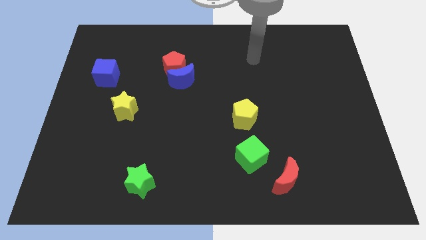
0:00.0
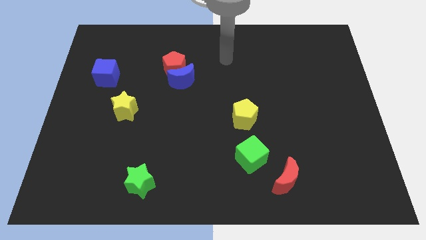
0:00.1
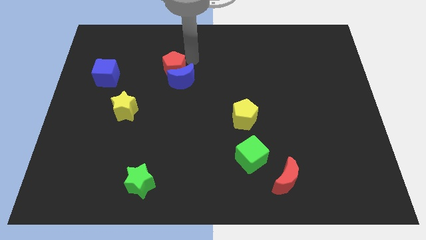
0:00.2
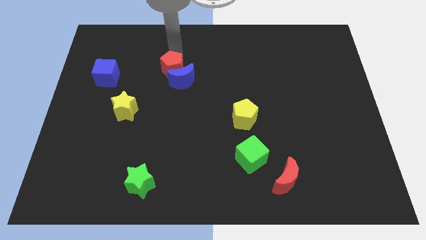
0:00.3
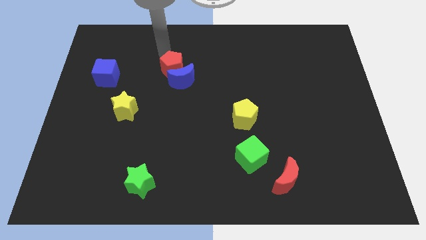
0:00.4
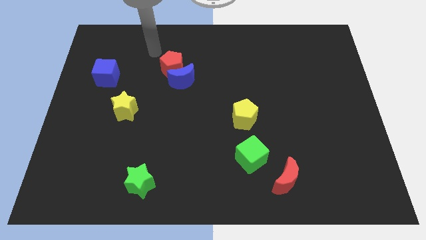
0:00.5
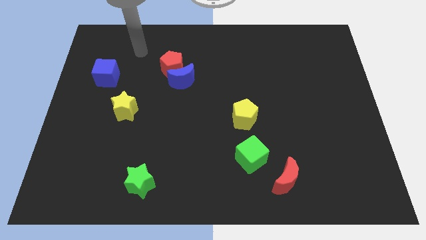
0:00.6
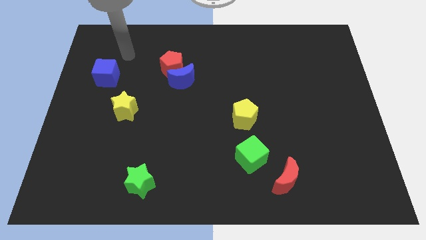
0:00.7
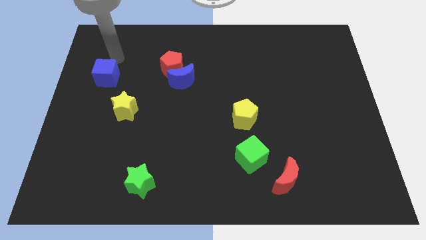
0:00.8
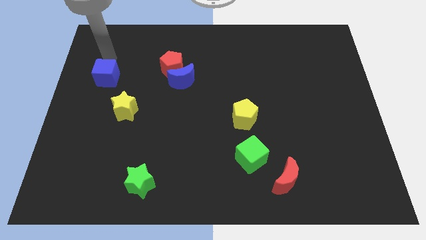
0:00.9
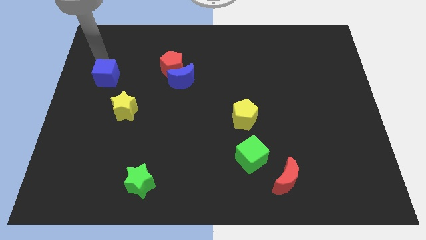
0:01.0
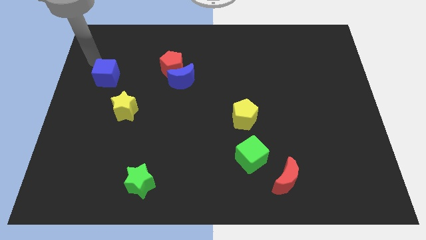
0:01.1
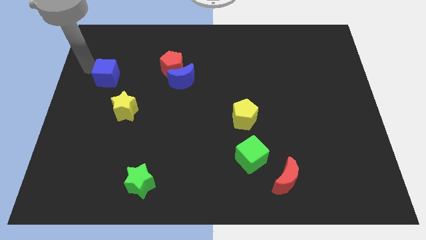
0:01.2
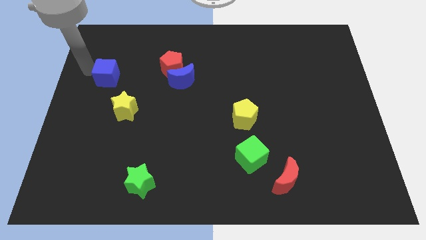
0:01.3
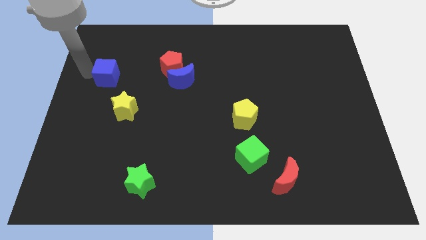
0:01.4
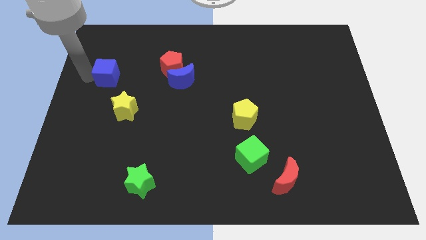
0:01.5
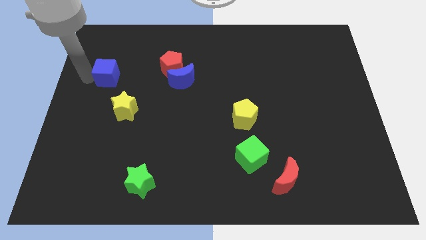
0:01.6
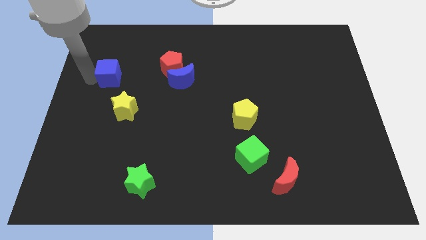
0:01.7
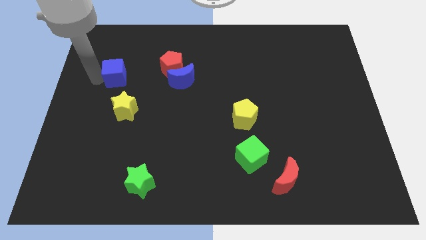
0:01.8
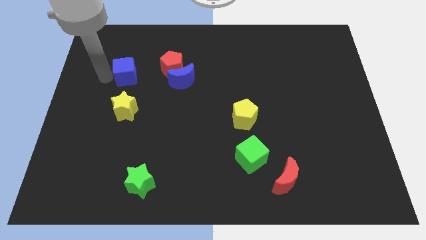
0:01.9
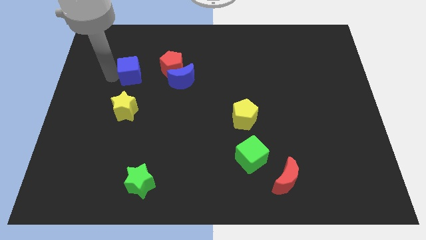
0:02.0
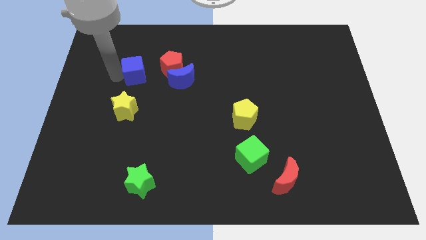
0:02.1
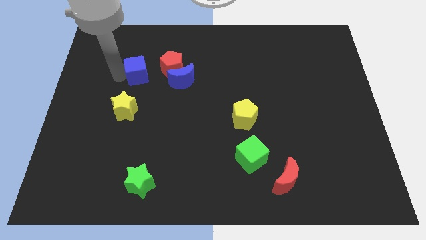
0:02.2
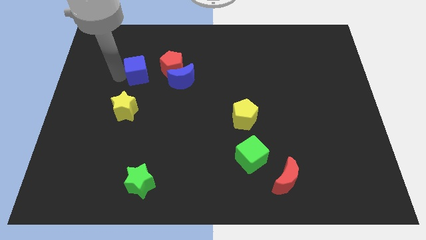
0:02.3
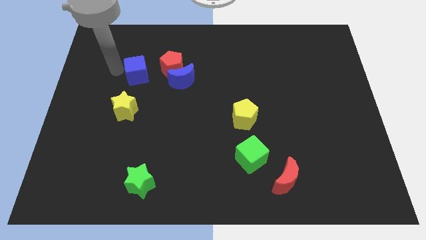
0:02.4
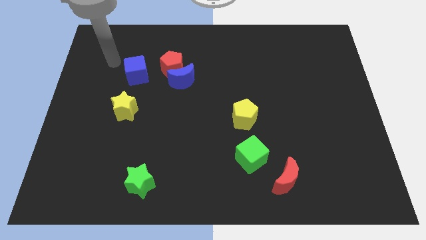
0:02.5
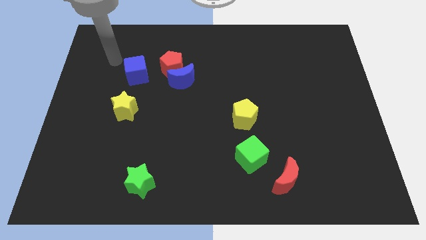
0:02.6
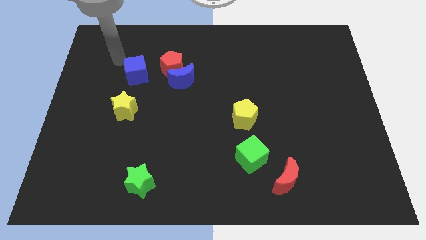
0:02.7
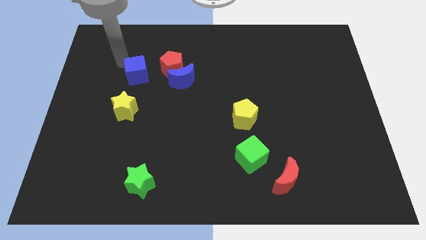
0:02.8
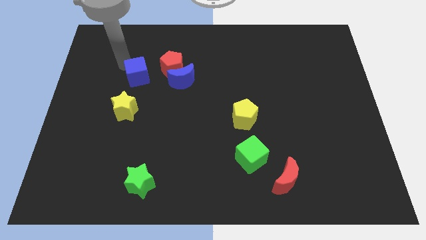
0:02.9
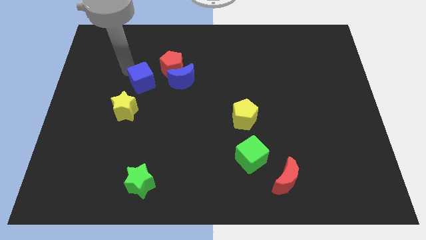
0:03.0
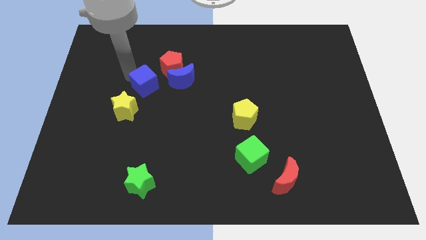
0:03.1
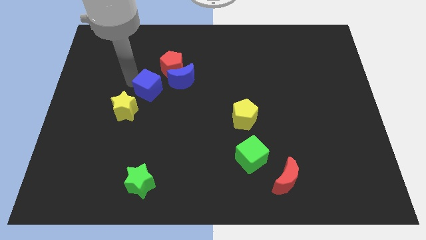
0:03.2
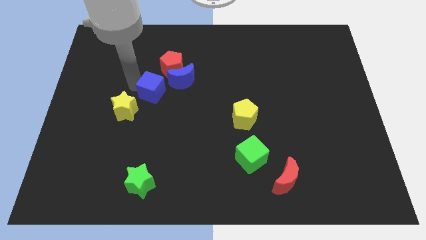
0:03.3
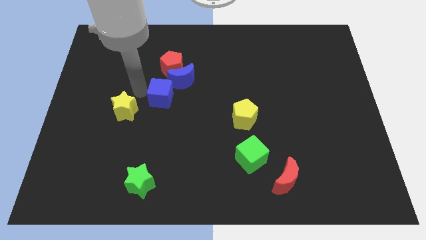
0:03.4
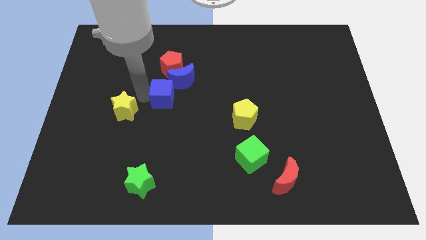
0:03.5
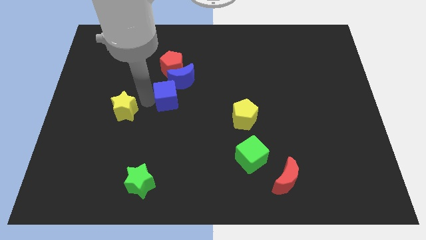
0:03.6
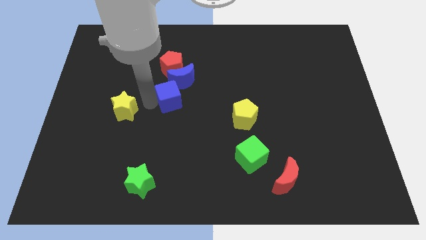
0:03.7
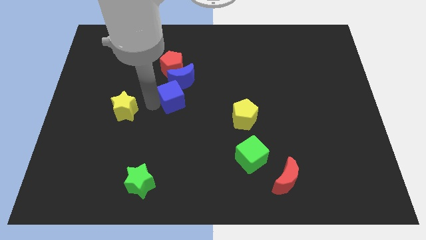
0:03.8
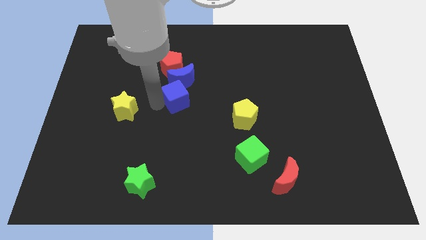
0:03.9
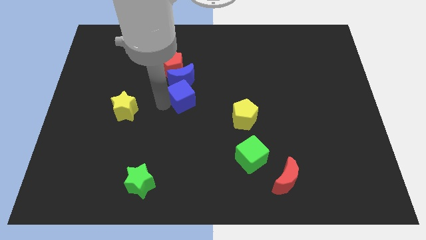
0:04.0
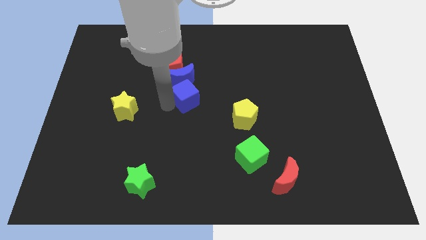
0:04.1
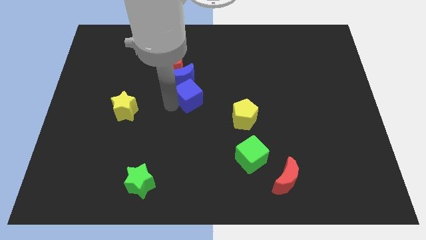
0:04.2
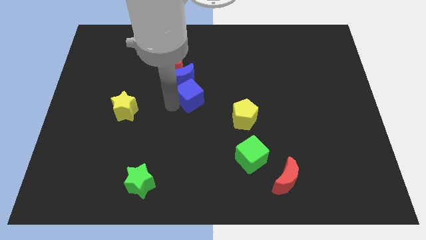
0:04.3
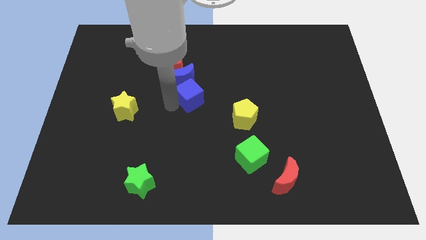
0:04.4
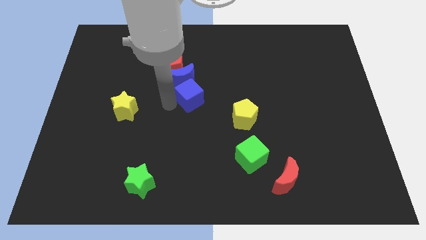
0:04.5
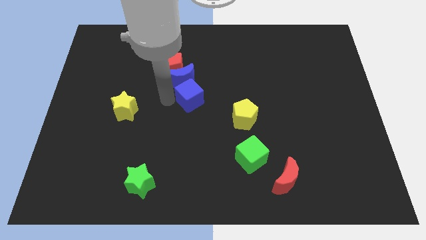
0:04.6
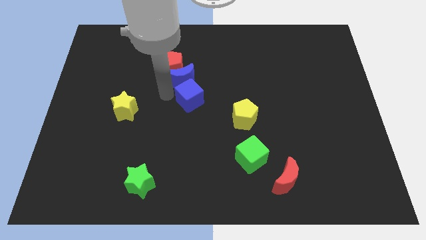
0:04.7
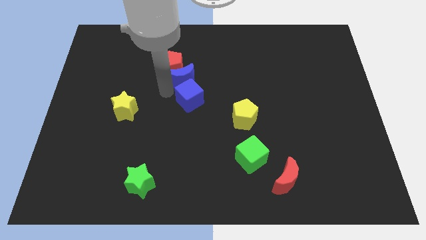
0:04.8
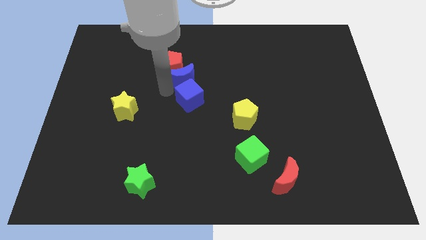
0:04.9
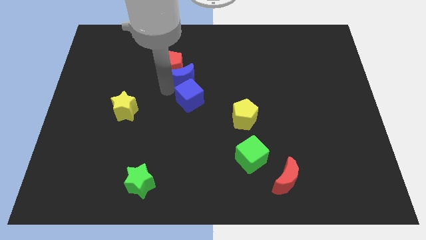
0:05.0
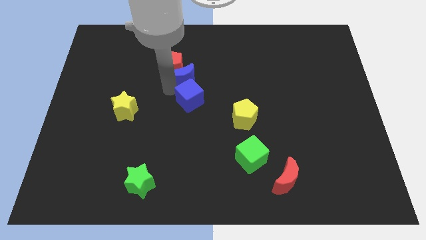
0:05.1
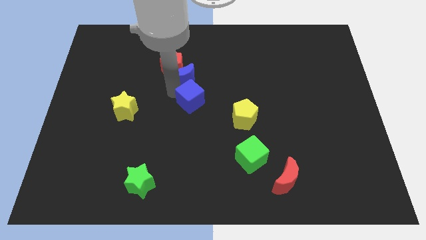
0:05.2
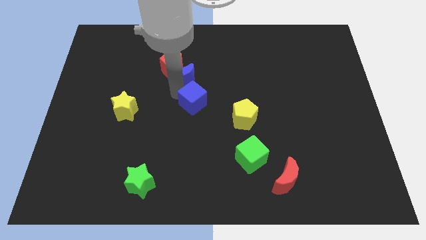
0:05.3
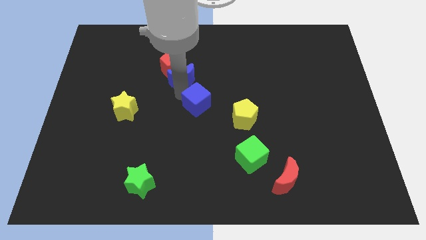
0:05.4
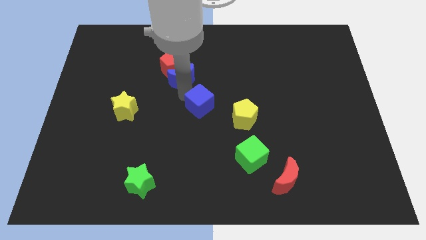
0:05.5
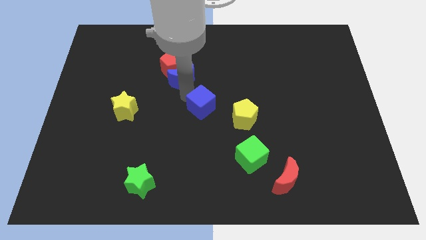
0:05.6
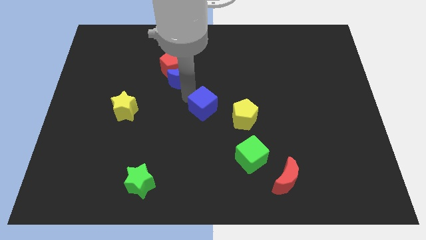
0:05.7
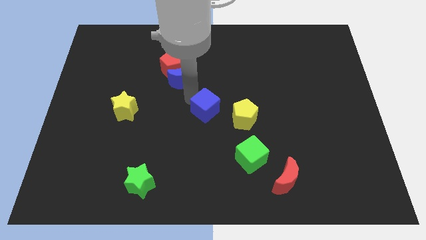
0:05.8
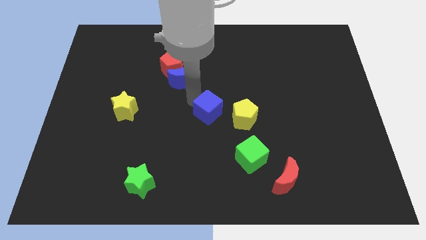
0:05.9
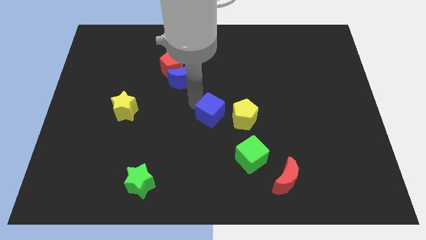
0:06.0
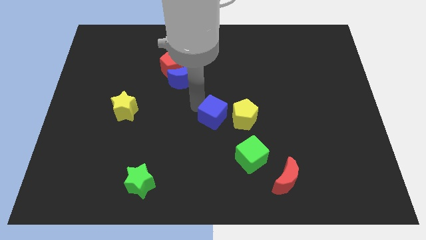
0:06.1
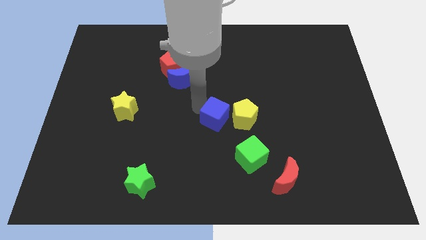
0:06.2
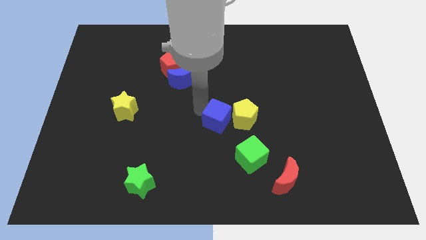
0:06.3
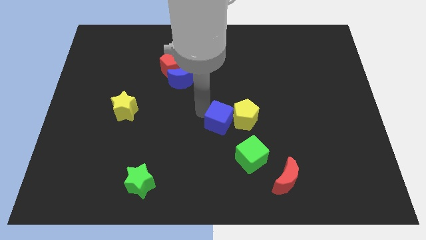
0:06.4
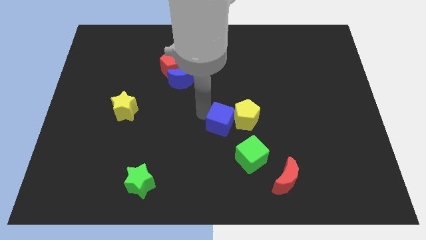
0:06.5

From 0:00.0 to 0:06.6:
move the blue cube towards the yellow pentagon

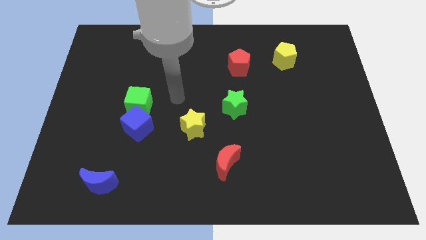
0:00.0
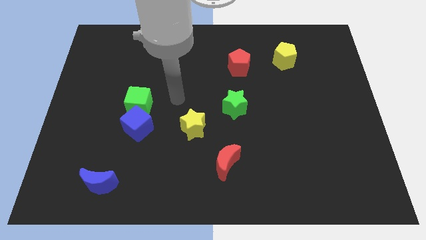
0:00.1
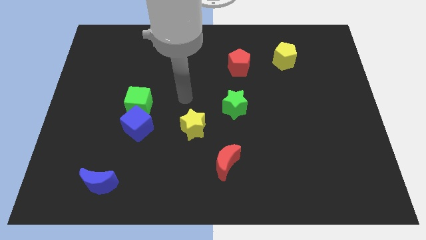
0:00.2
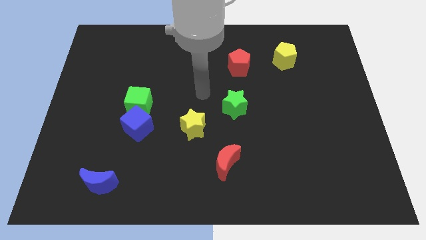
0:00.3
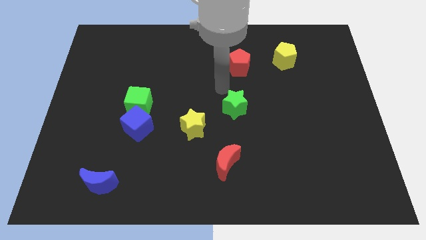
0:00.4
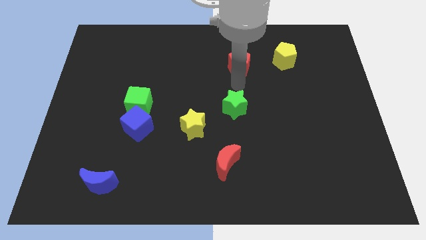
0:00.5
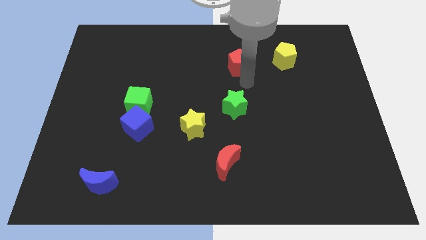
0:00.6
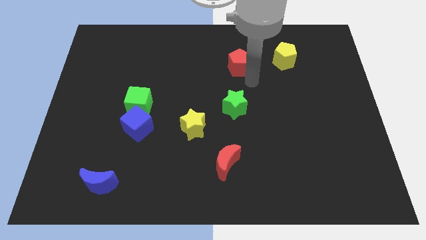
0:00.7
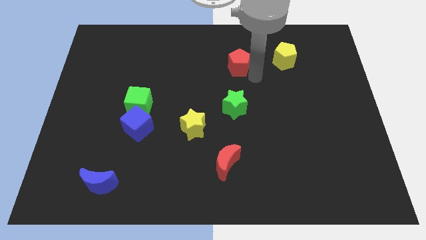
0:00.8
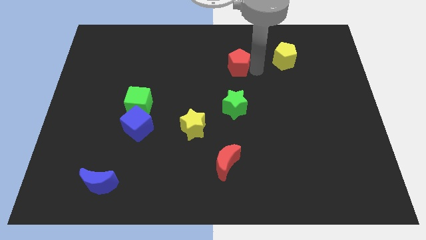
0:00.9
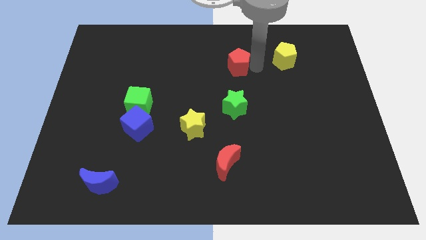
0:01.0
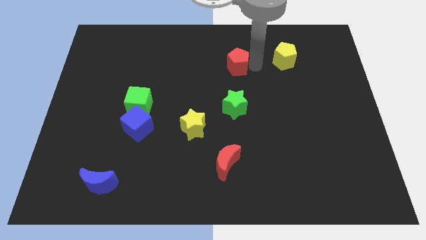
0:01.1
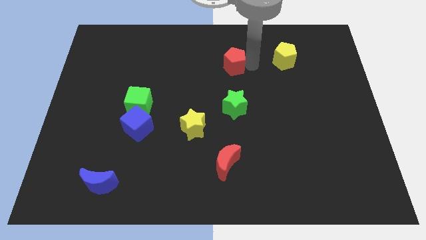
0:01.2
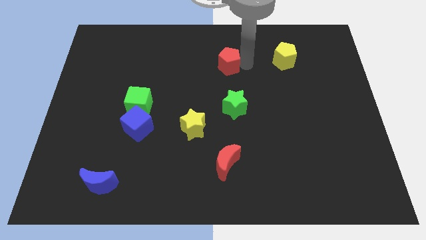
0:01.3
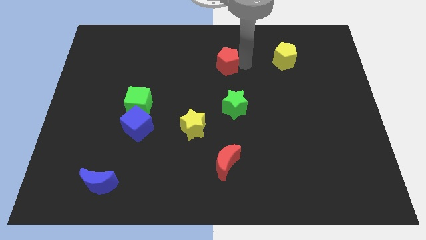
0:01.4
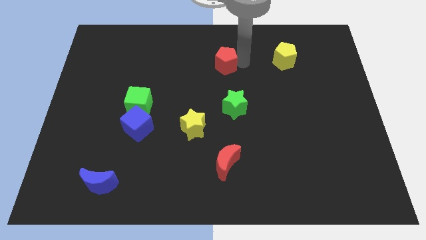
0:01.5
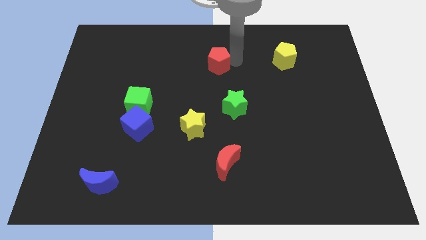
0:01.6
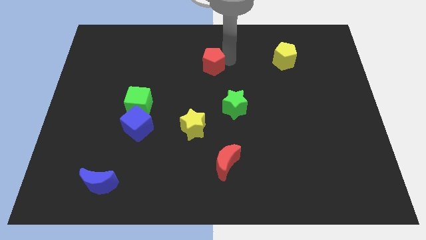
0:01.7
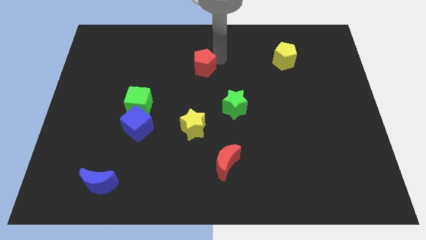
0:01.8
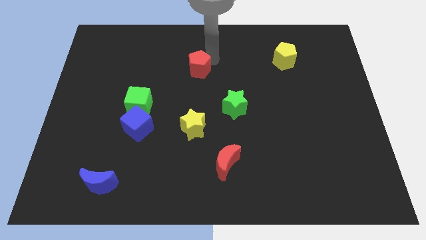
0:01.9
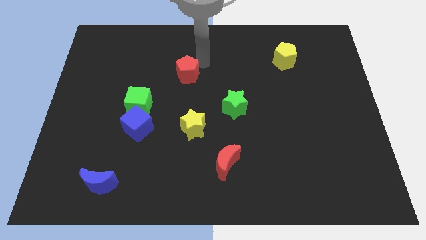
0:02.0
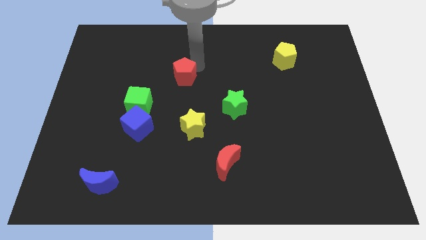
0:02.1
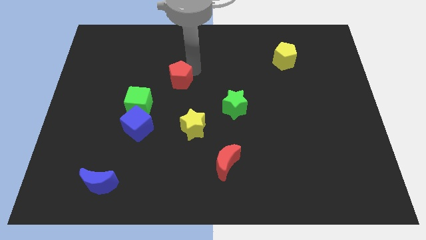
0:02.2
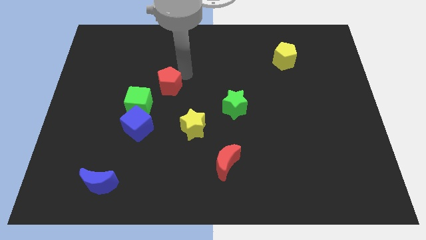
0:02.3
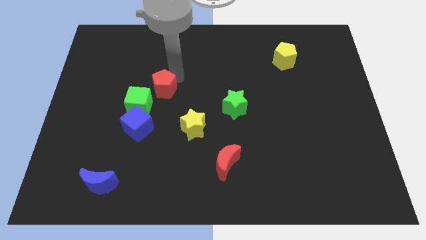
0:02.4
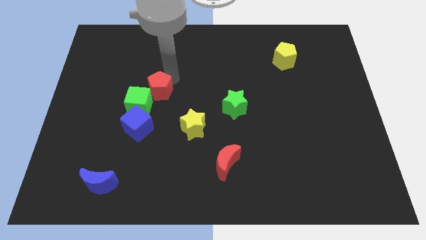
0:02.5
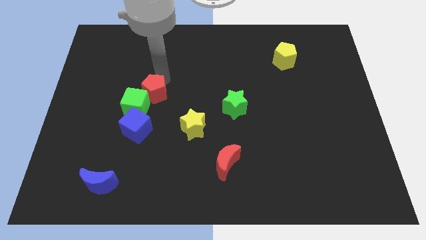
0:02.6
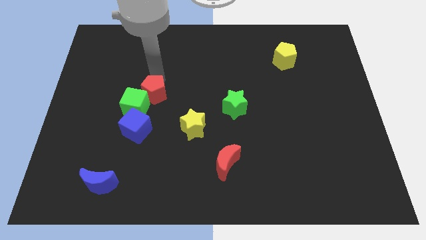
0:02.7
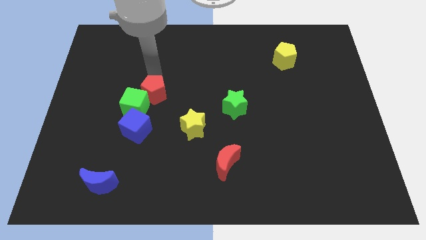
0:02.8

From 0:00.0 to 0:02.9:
slide the red pentagon to the green cube
